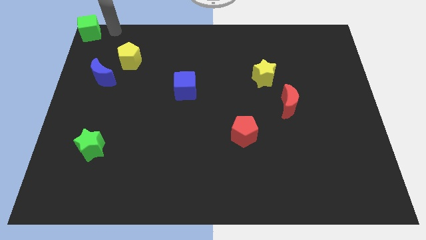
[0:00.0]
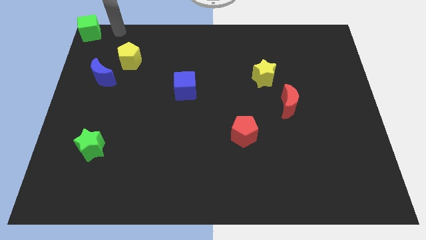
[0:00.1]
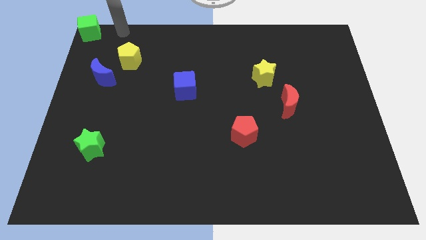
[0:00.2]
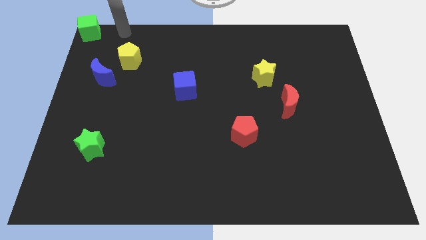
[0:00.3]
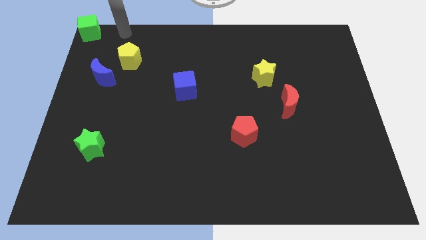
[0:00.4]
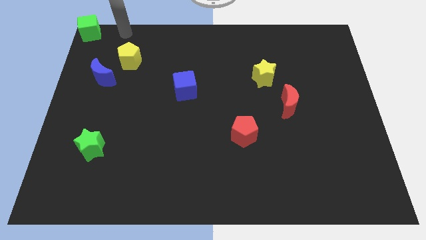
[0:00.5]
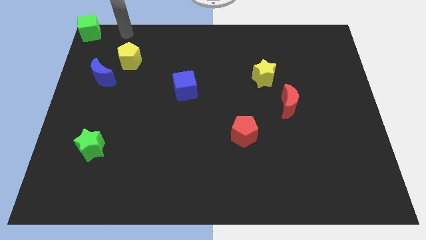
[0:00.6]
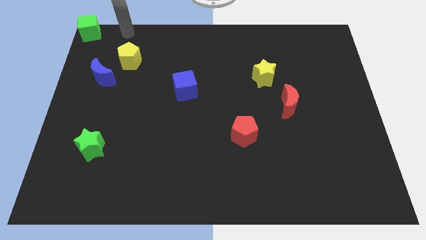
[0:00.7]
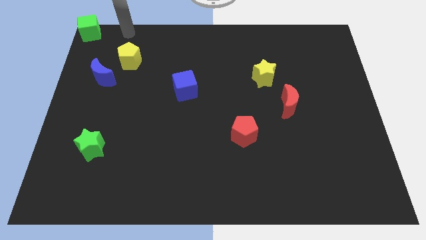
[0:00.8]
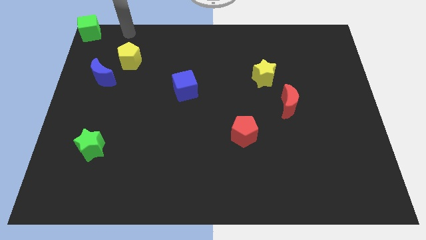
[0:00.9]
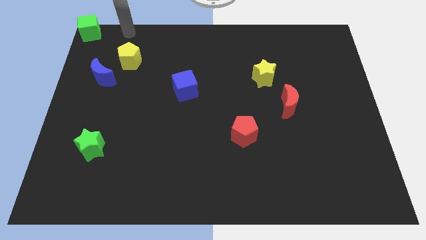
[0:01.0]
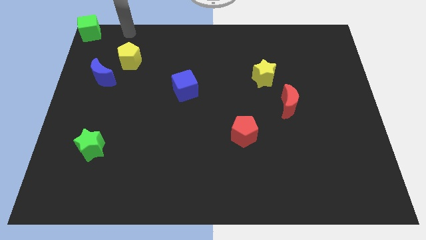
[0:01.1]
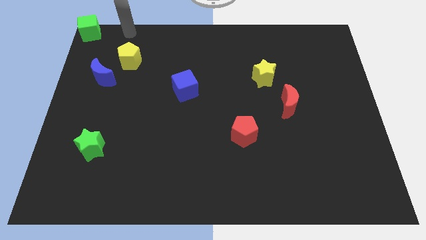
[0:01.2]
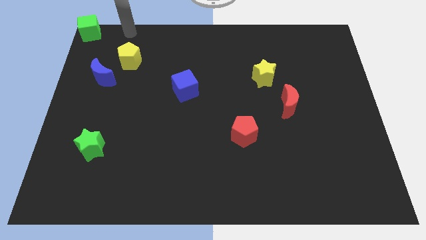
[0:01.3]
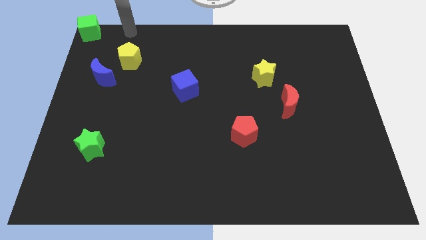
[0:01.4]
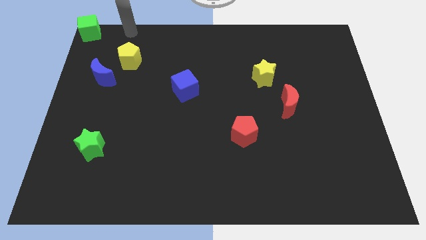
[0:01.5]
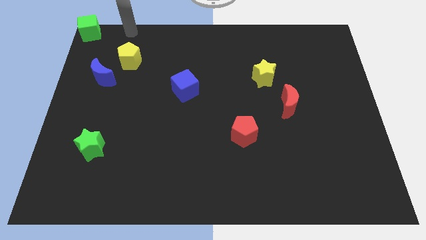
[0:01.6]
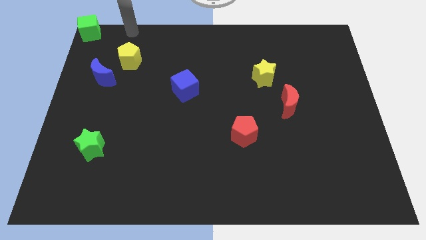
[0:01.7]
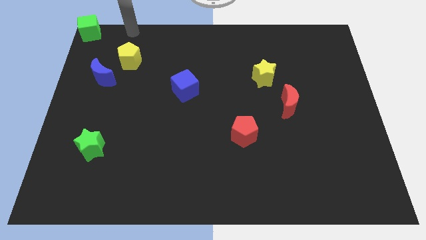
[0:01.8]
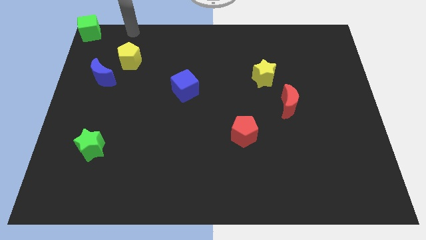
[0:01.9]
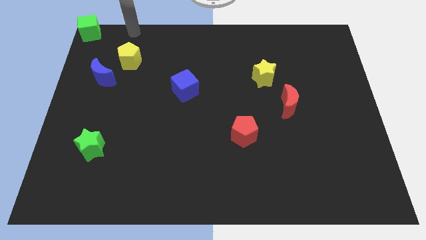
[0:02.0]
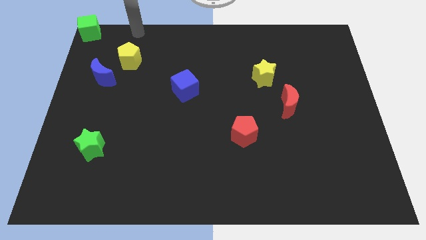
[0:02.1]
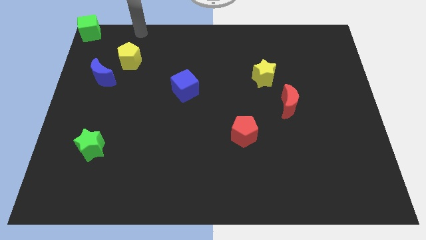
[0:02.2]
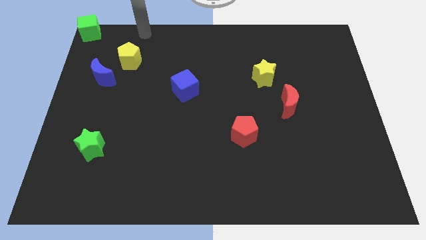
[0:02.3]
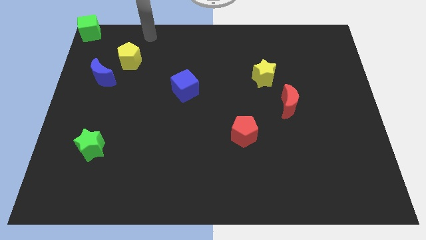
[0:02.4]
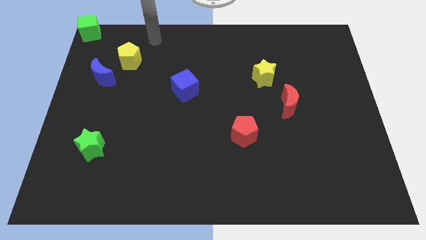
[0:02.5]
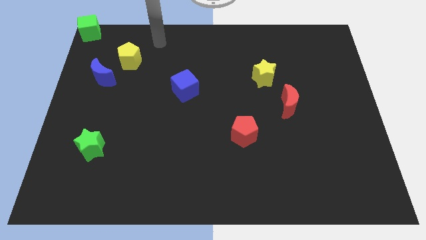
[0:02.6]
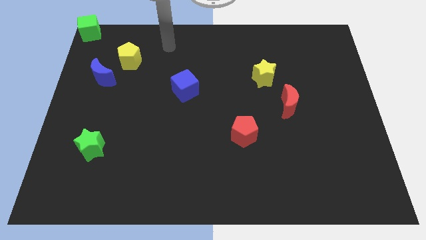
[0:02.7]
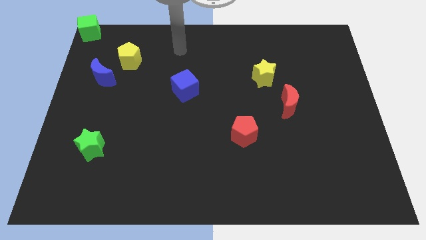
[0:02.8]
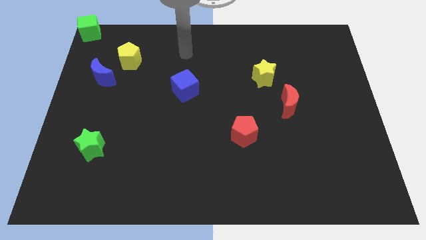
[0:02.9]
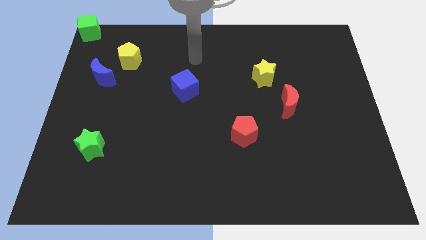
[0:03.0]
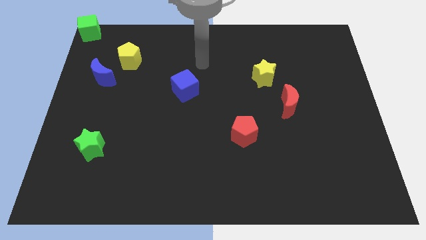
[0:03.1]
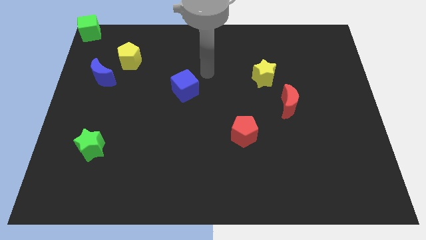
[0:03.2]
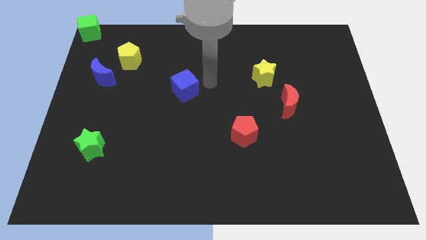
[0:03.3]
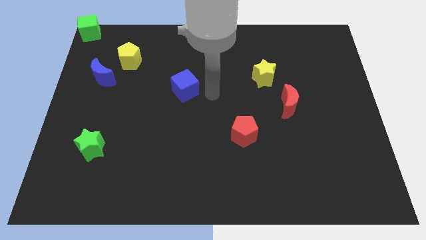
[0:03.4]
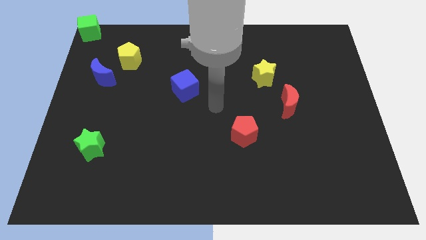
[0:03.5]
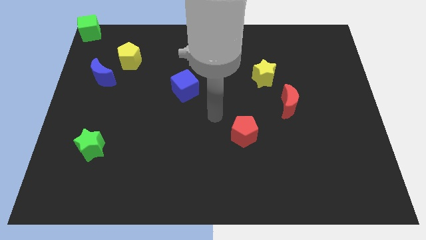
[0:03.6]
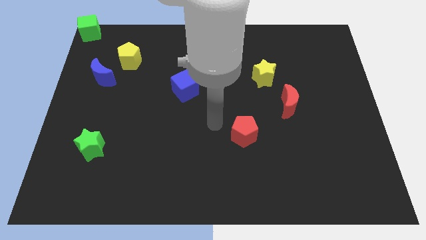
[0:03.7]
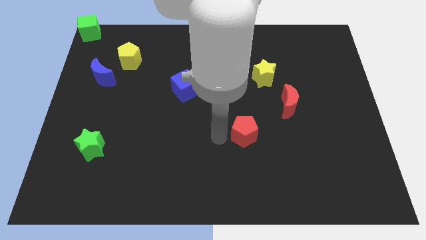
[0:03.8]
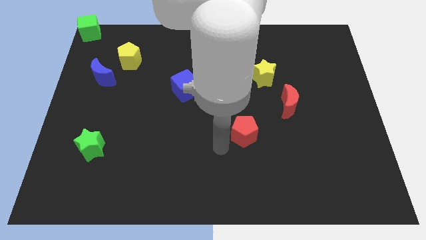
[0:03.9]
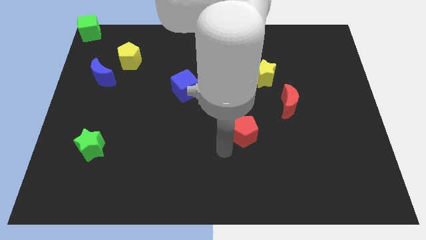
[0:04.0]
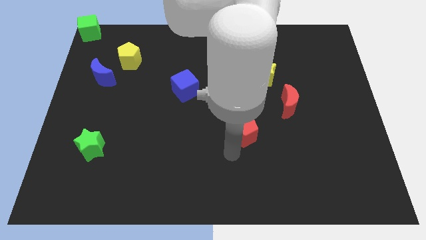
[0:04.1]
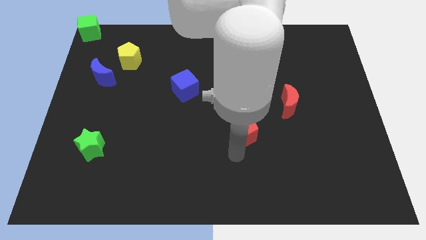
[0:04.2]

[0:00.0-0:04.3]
go near the red pentagon

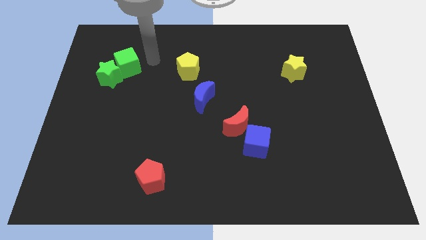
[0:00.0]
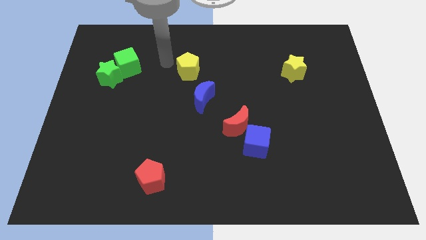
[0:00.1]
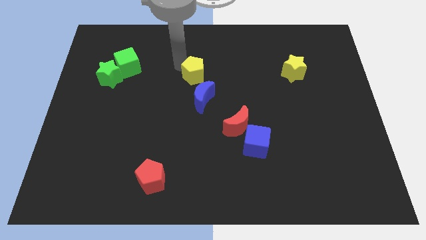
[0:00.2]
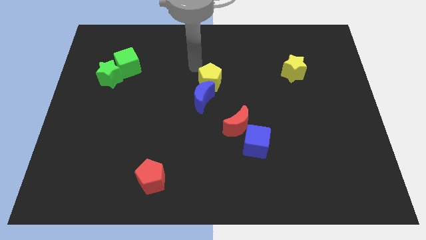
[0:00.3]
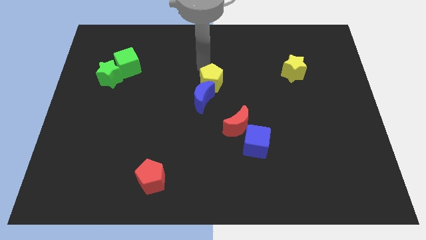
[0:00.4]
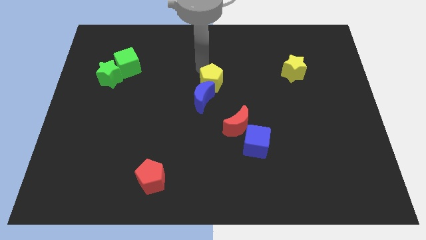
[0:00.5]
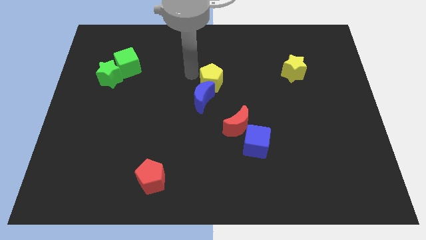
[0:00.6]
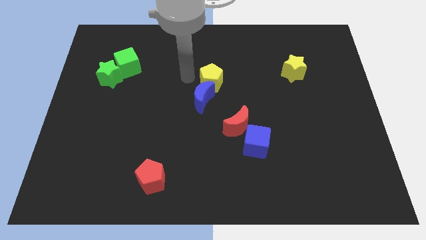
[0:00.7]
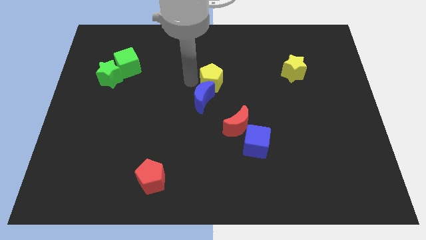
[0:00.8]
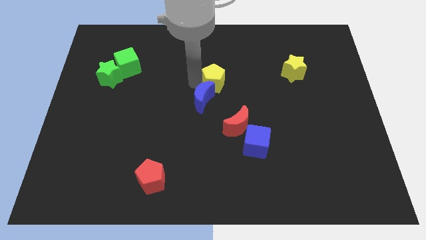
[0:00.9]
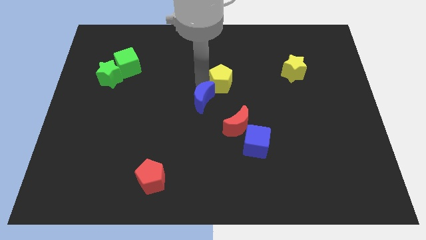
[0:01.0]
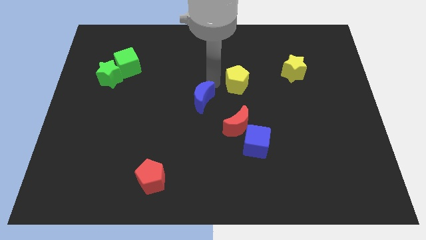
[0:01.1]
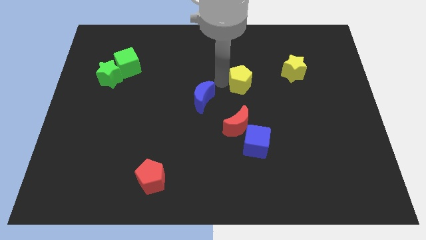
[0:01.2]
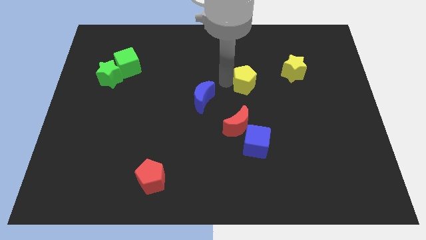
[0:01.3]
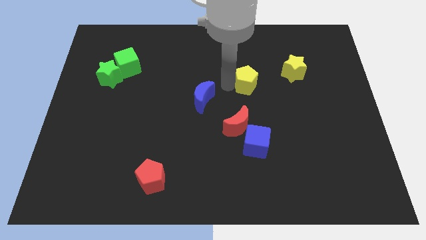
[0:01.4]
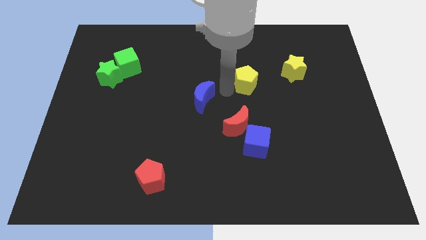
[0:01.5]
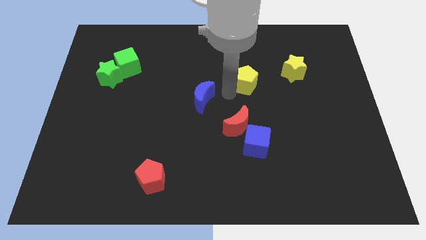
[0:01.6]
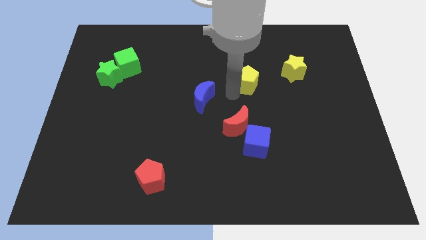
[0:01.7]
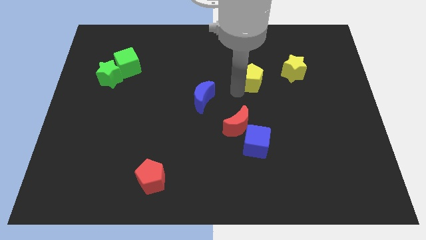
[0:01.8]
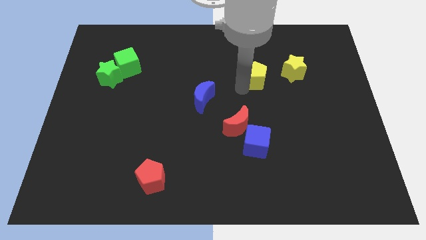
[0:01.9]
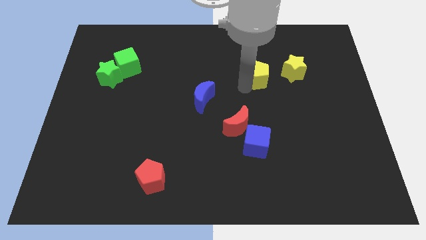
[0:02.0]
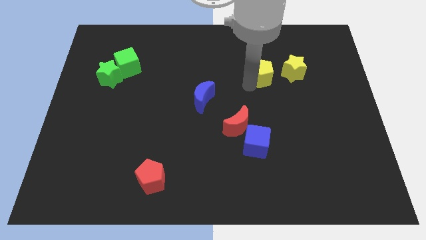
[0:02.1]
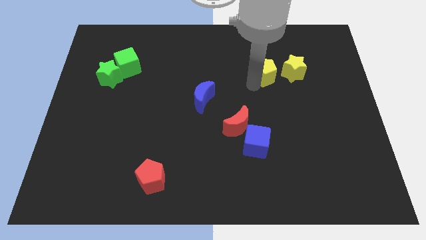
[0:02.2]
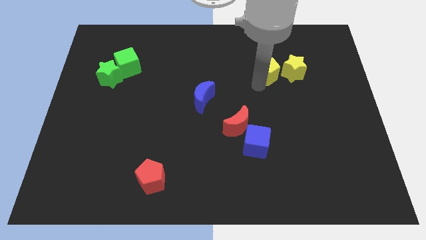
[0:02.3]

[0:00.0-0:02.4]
push the yellow pentagon close to the left of the yellow star

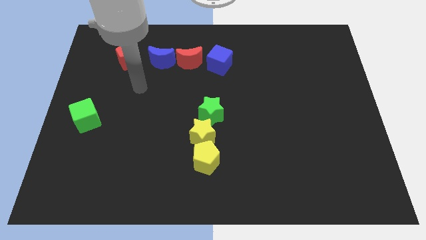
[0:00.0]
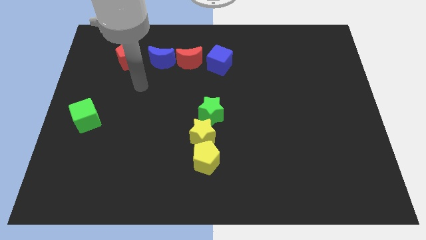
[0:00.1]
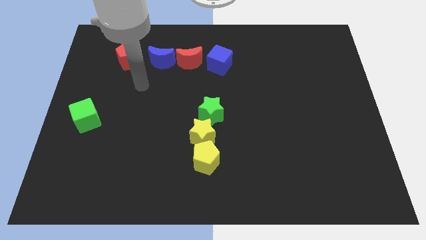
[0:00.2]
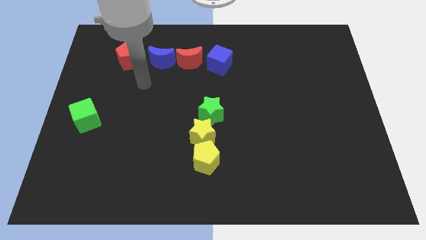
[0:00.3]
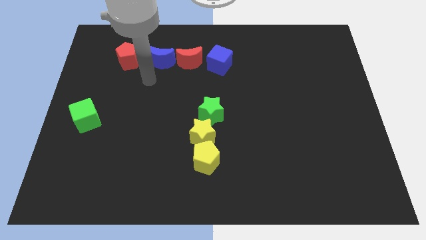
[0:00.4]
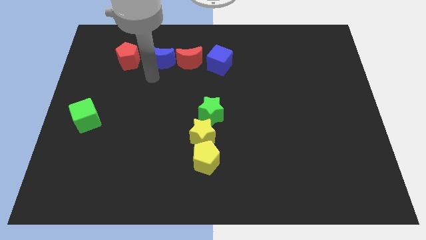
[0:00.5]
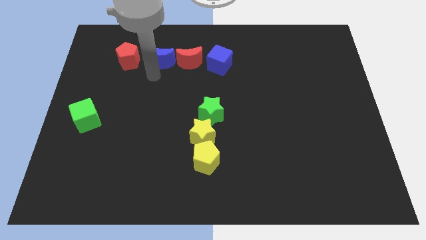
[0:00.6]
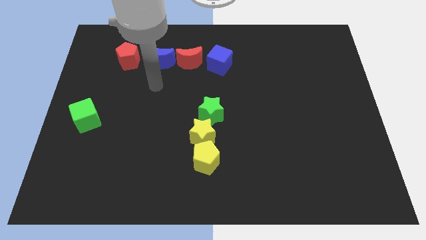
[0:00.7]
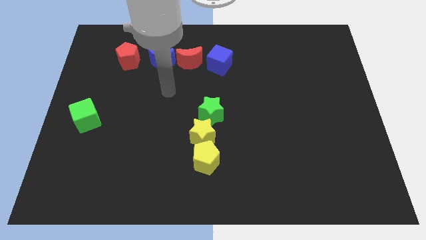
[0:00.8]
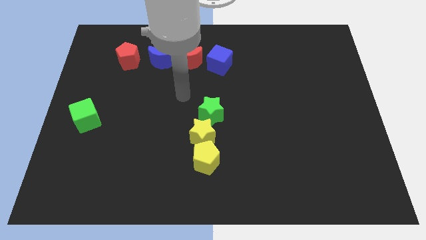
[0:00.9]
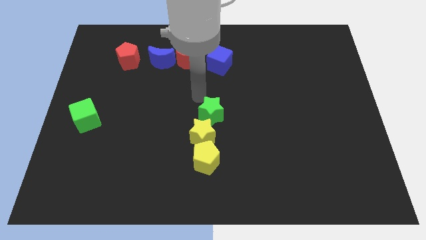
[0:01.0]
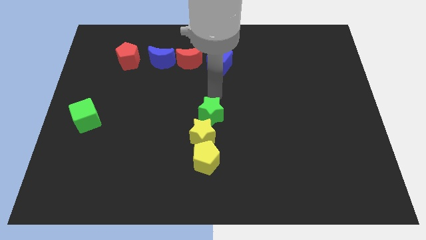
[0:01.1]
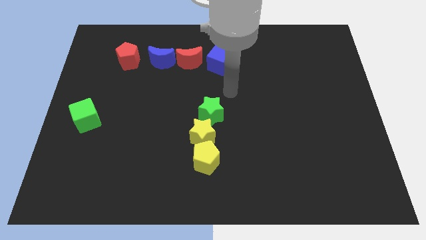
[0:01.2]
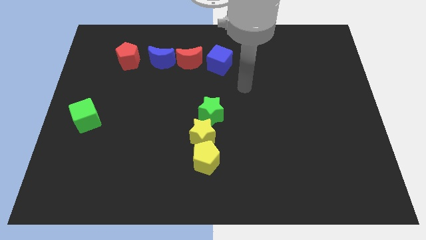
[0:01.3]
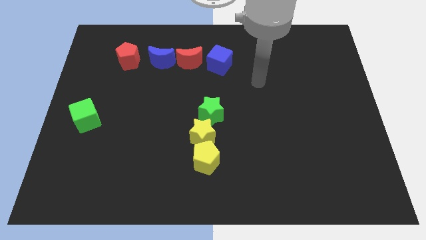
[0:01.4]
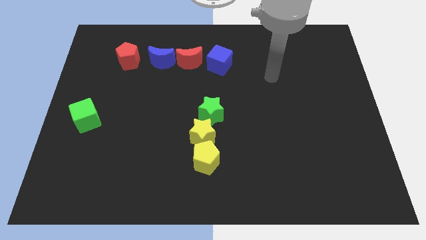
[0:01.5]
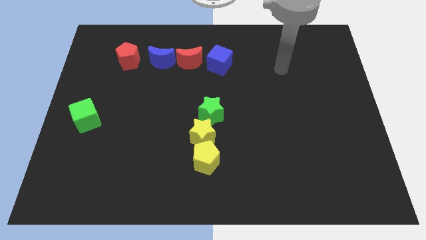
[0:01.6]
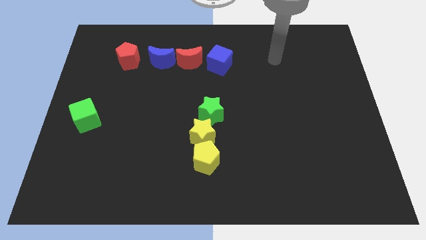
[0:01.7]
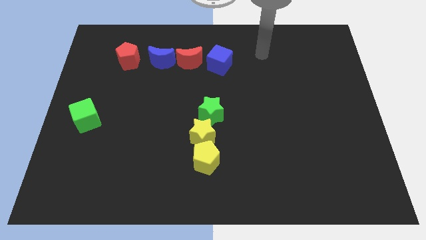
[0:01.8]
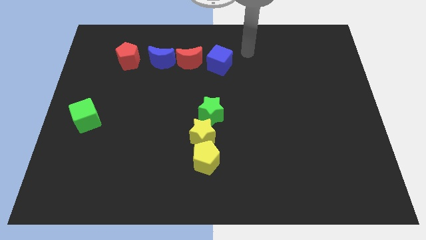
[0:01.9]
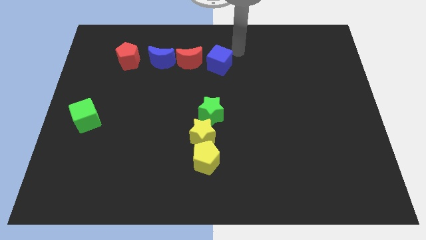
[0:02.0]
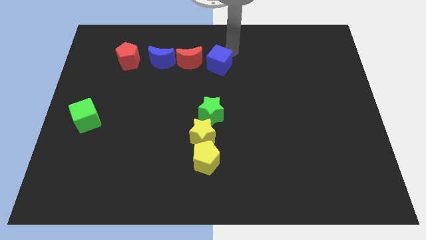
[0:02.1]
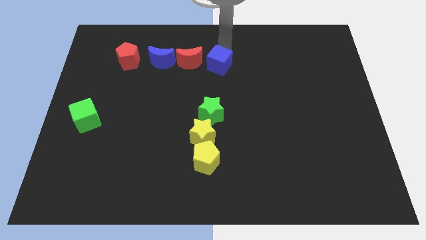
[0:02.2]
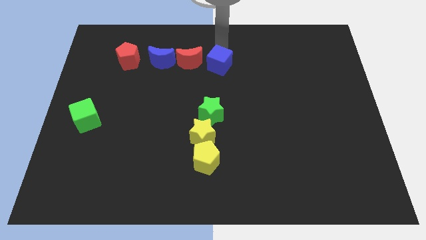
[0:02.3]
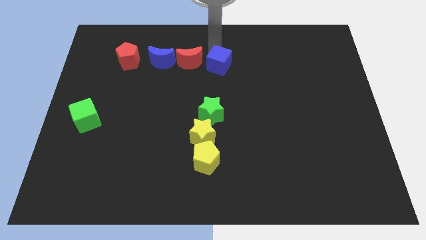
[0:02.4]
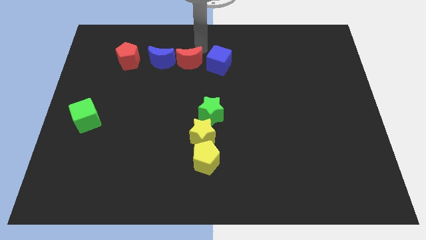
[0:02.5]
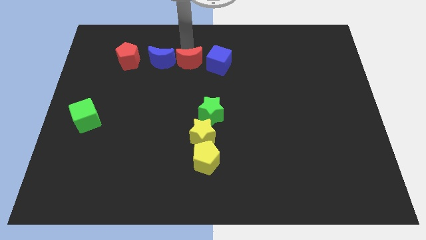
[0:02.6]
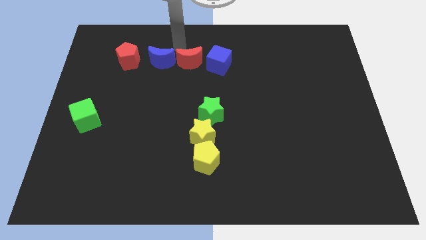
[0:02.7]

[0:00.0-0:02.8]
go and tap the top side of the blue cube
